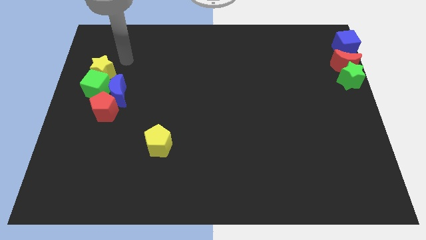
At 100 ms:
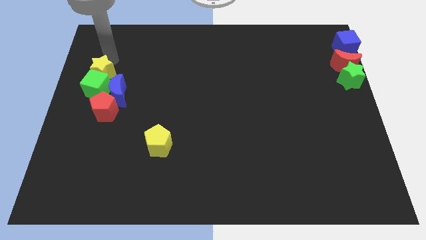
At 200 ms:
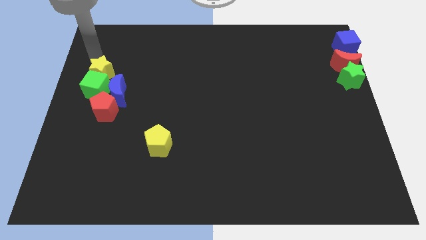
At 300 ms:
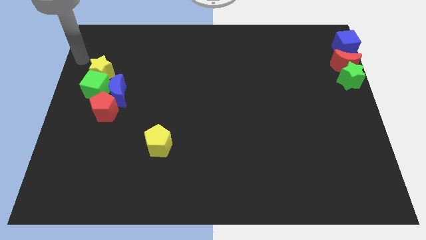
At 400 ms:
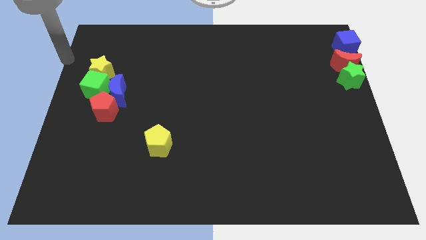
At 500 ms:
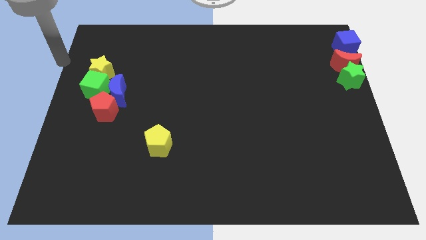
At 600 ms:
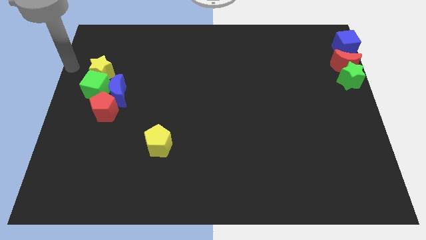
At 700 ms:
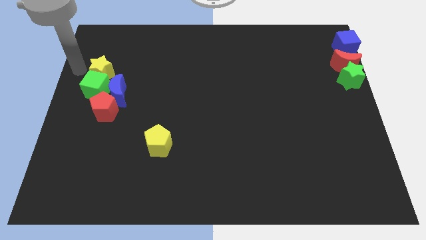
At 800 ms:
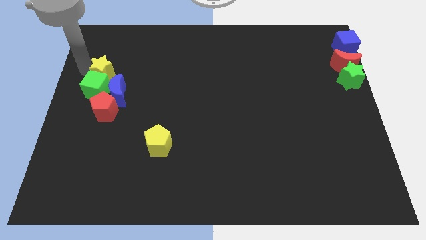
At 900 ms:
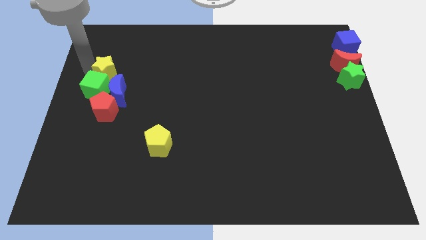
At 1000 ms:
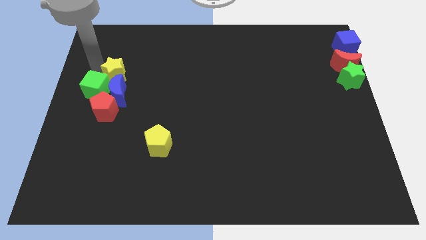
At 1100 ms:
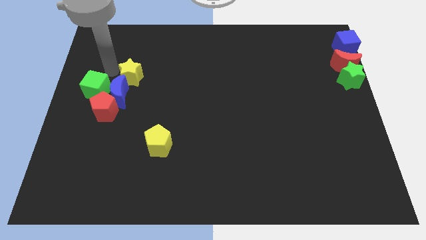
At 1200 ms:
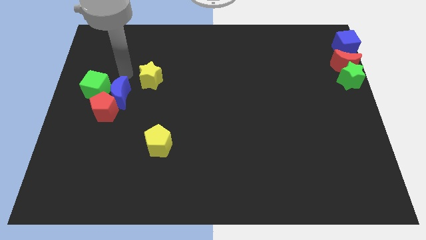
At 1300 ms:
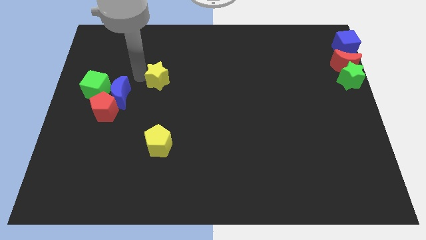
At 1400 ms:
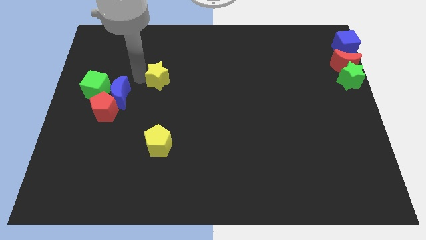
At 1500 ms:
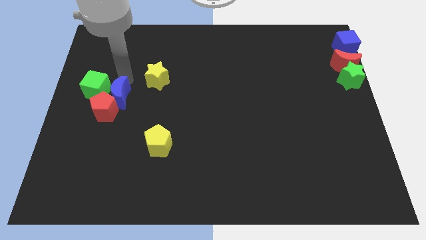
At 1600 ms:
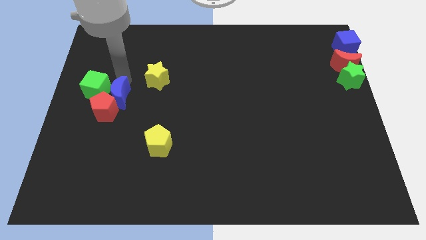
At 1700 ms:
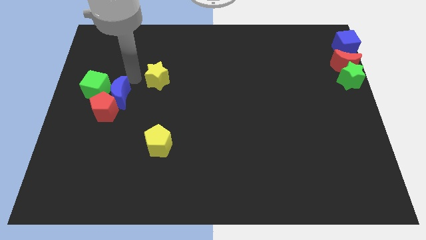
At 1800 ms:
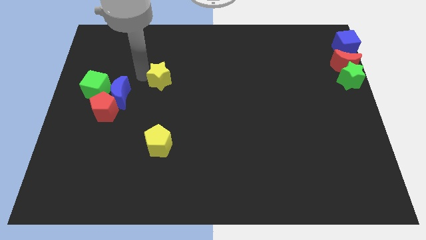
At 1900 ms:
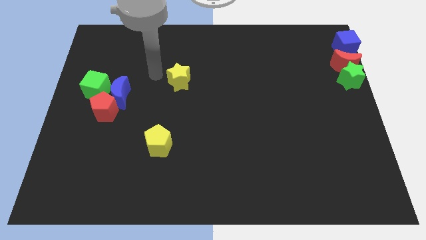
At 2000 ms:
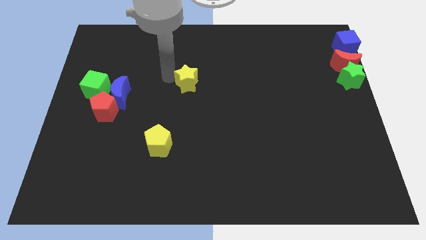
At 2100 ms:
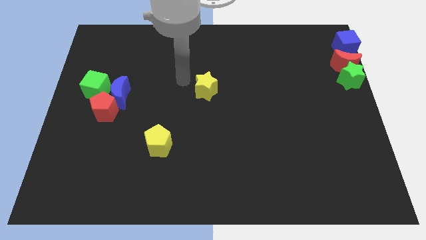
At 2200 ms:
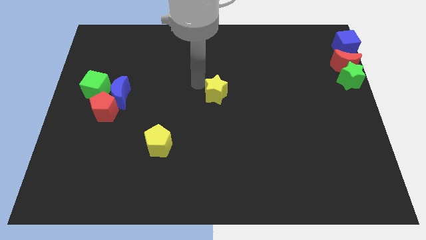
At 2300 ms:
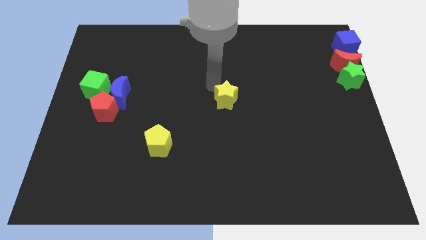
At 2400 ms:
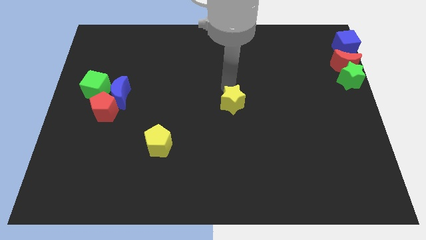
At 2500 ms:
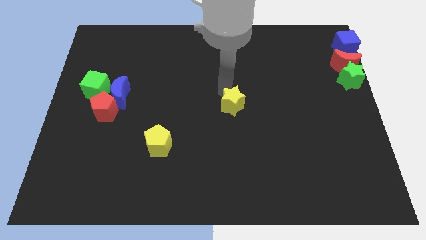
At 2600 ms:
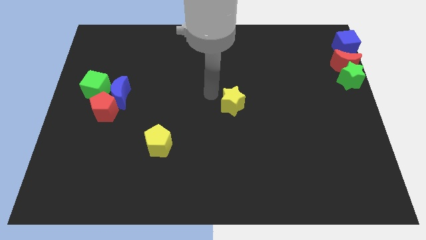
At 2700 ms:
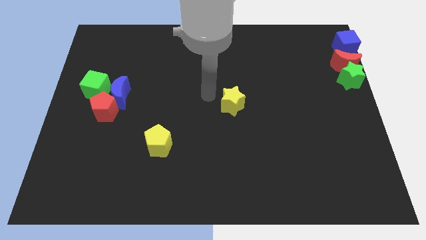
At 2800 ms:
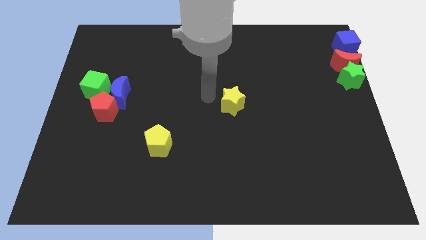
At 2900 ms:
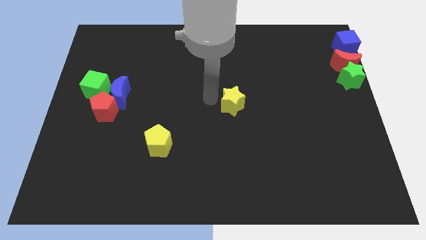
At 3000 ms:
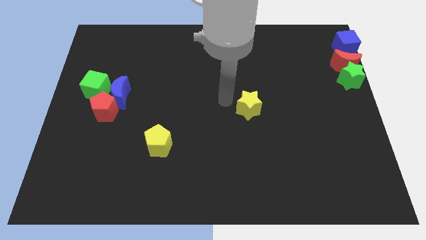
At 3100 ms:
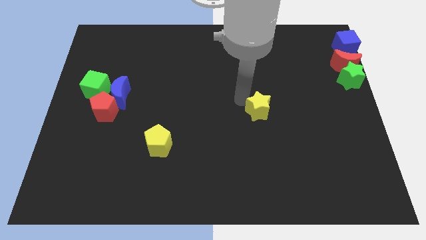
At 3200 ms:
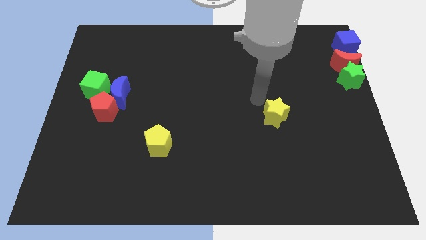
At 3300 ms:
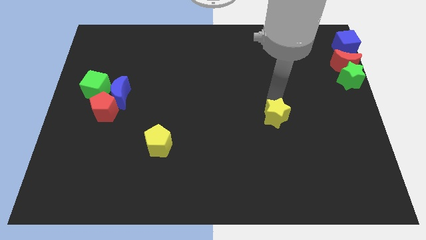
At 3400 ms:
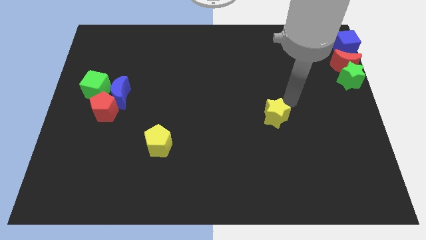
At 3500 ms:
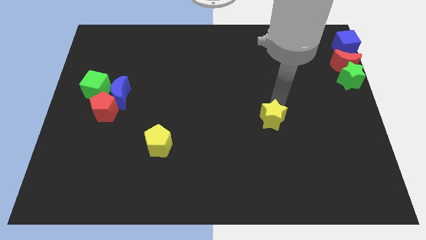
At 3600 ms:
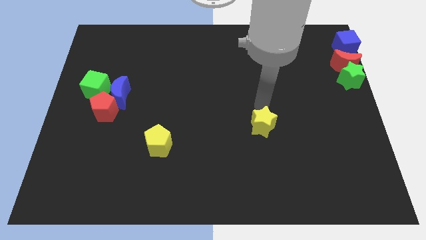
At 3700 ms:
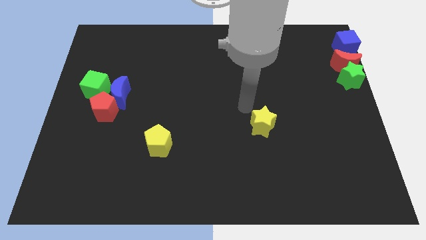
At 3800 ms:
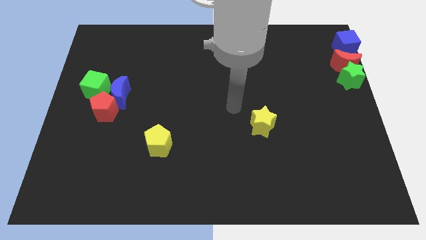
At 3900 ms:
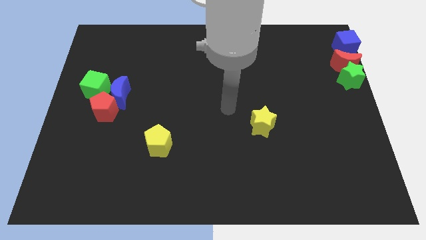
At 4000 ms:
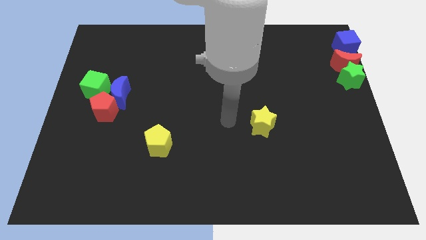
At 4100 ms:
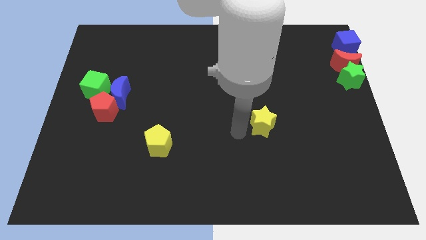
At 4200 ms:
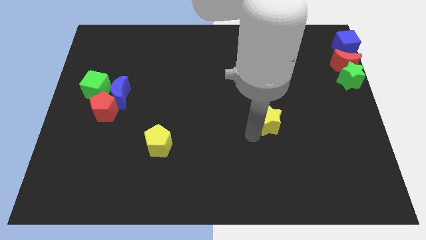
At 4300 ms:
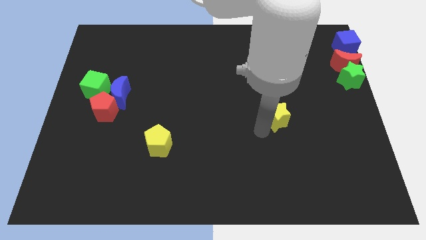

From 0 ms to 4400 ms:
move the yellow star towards the center right corner of the board

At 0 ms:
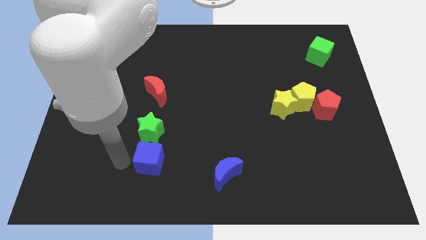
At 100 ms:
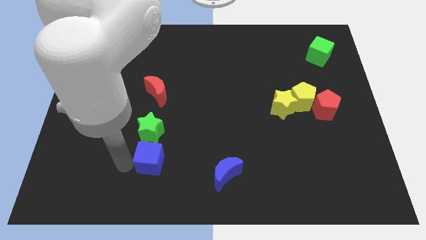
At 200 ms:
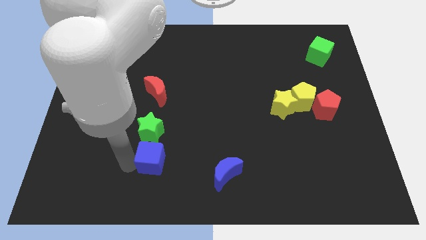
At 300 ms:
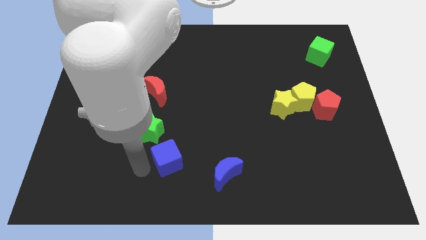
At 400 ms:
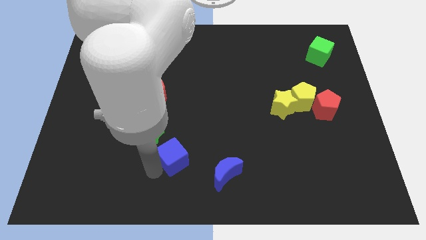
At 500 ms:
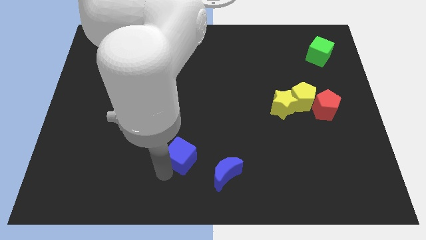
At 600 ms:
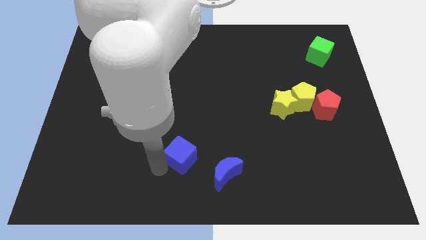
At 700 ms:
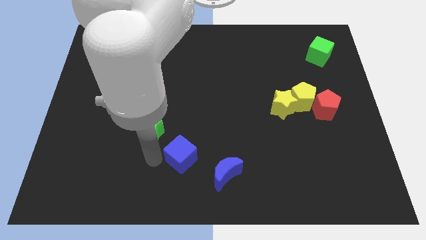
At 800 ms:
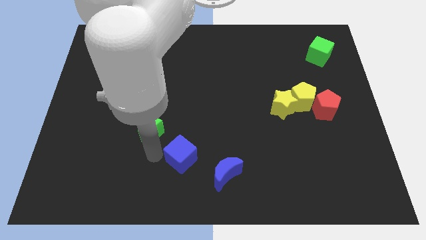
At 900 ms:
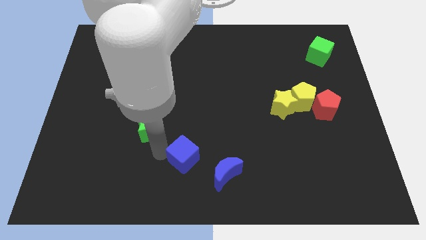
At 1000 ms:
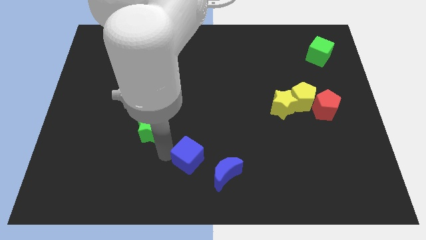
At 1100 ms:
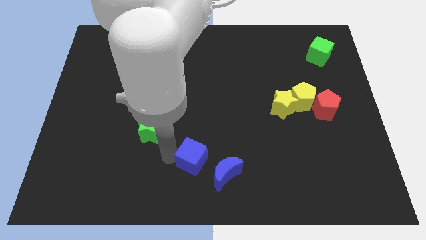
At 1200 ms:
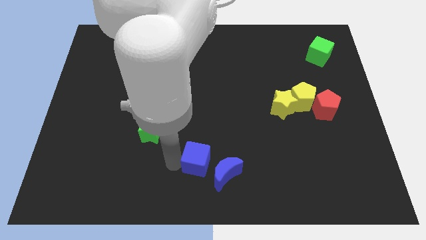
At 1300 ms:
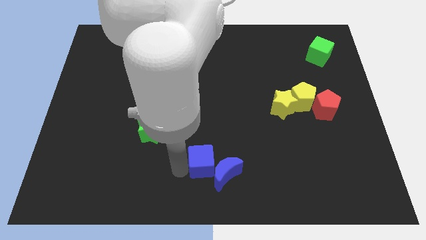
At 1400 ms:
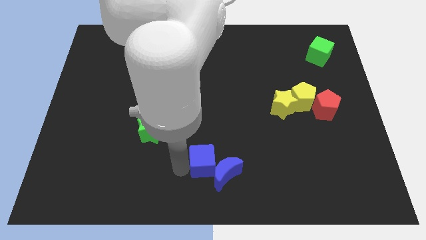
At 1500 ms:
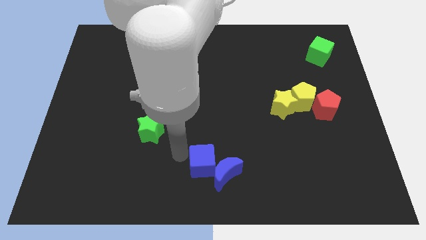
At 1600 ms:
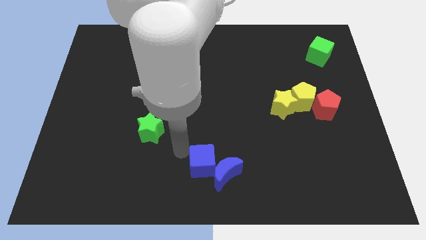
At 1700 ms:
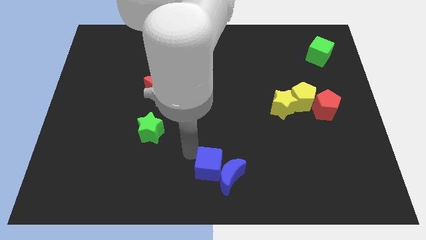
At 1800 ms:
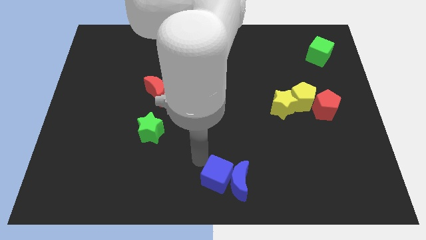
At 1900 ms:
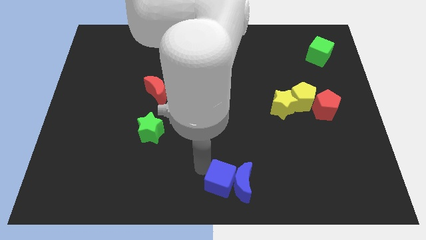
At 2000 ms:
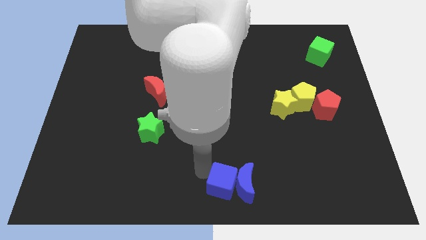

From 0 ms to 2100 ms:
push the blue cube into the blue moon

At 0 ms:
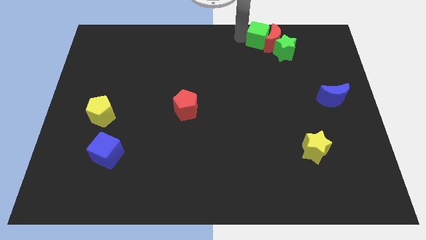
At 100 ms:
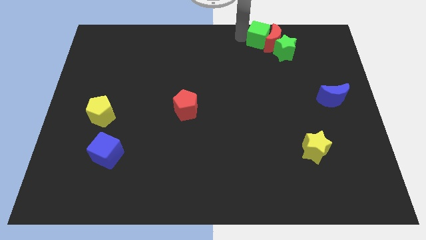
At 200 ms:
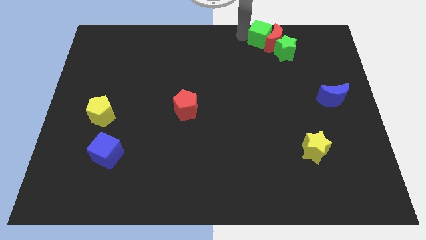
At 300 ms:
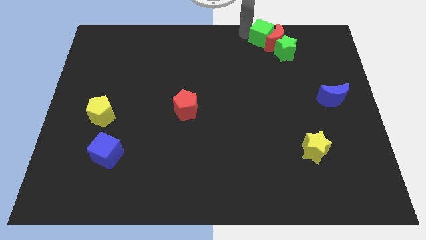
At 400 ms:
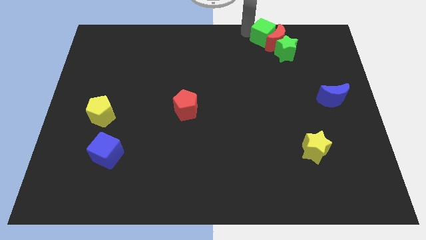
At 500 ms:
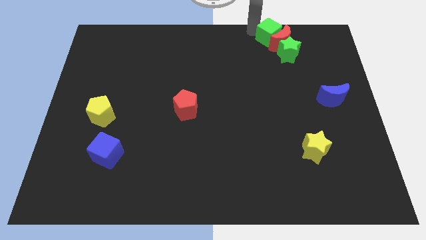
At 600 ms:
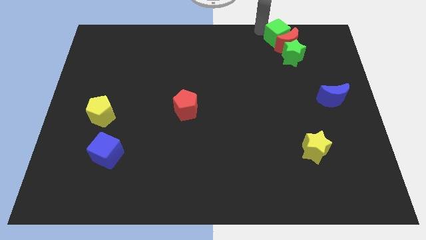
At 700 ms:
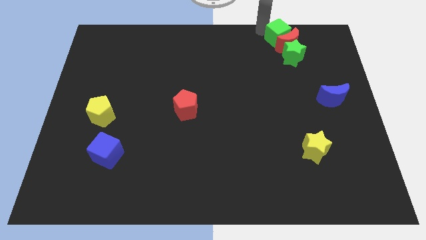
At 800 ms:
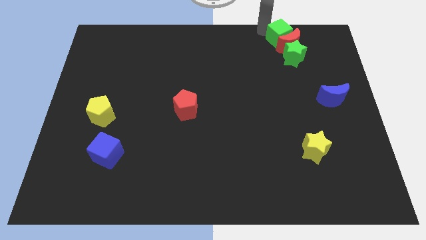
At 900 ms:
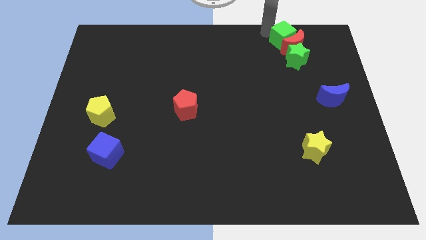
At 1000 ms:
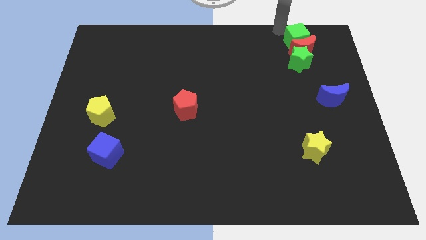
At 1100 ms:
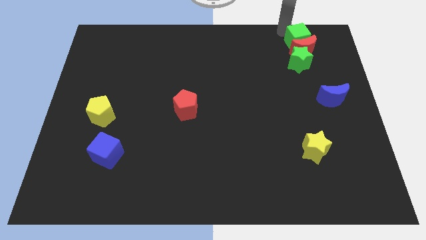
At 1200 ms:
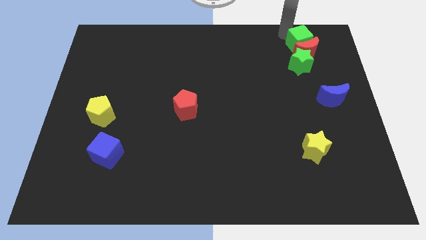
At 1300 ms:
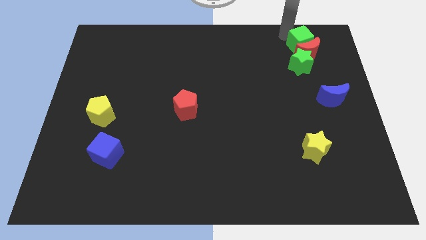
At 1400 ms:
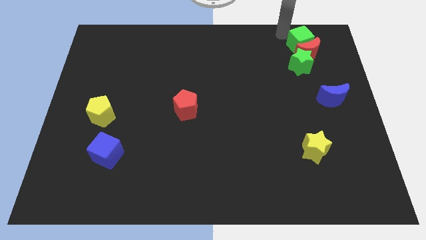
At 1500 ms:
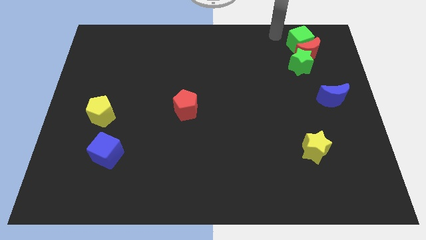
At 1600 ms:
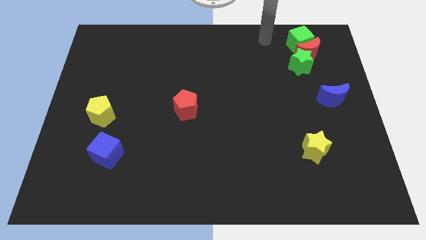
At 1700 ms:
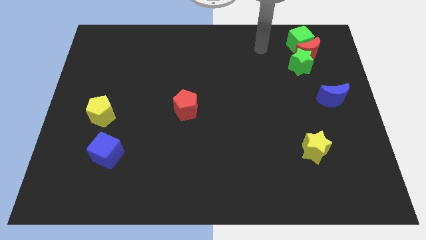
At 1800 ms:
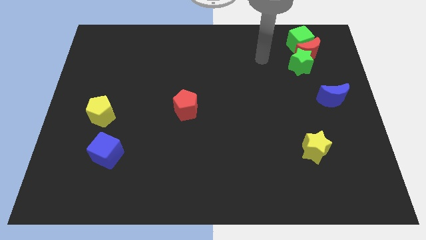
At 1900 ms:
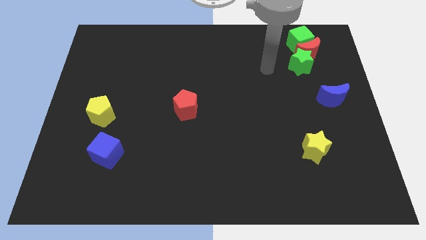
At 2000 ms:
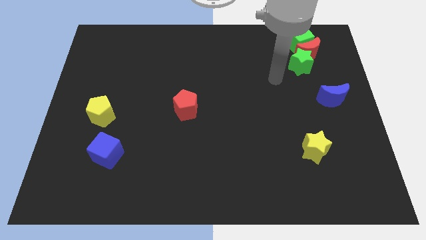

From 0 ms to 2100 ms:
push green blocks along with the red moon slightly down

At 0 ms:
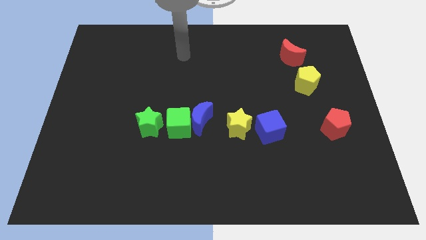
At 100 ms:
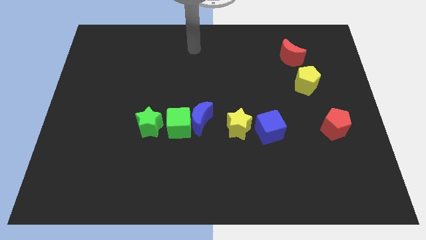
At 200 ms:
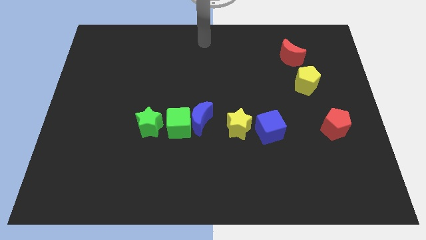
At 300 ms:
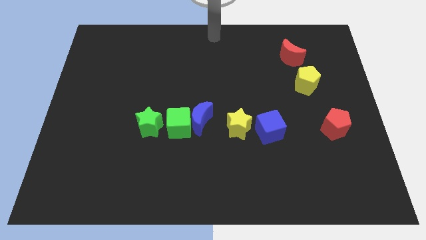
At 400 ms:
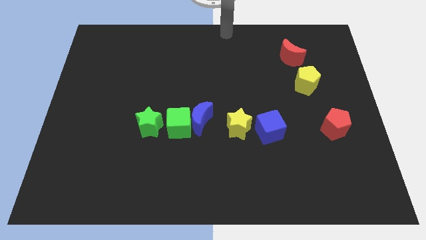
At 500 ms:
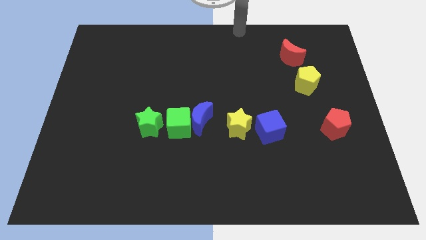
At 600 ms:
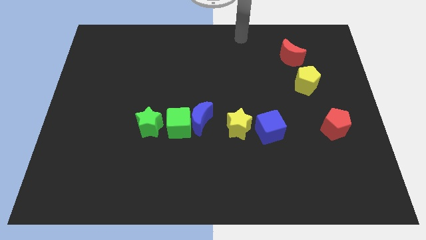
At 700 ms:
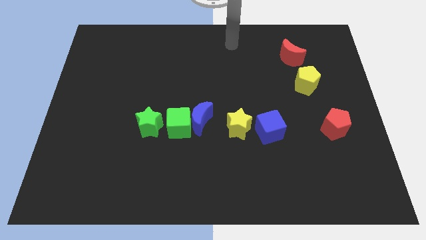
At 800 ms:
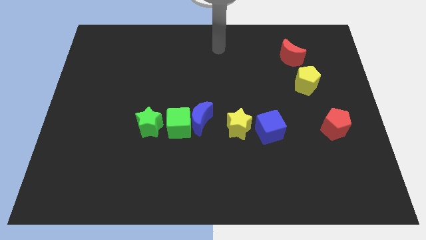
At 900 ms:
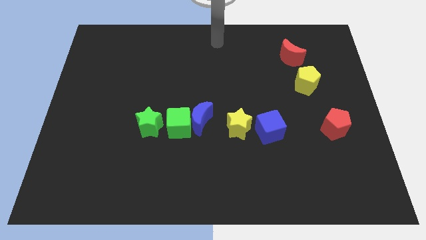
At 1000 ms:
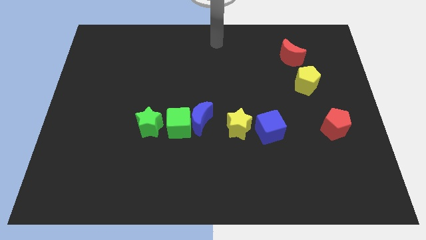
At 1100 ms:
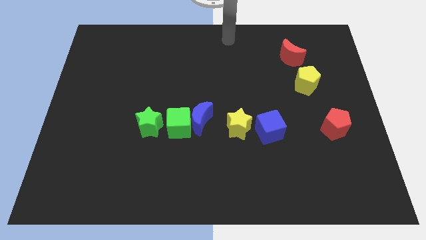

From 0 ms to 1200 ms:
point your arm at the top center
